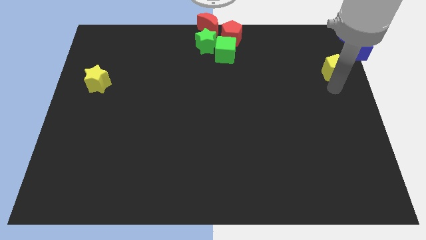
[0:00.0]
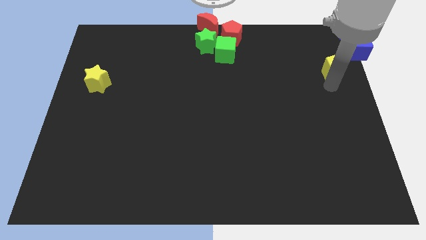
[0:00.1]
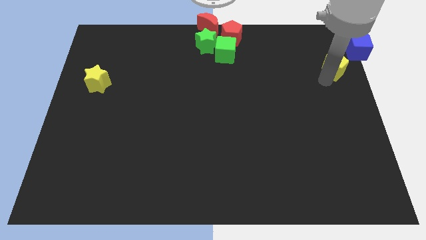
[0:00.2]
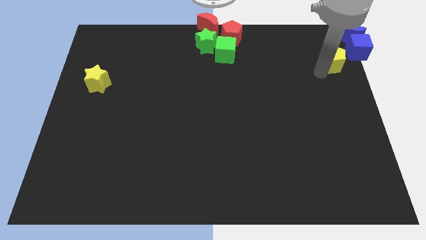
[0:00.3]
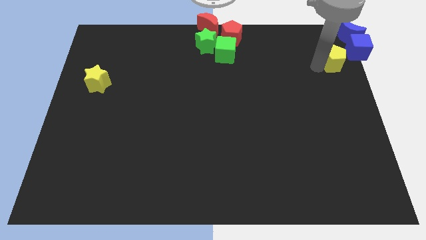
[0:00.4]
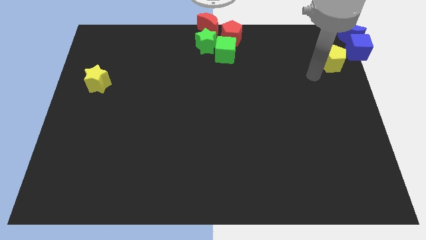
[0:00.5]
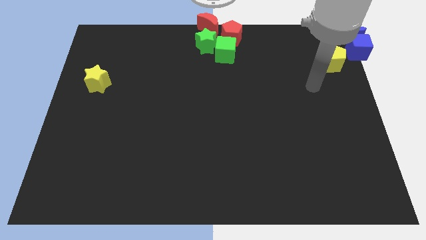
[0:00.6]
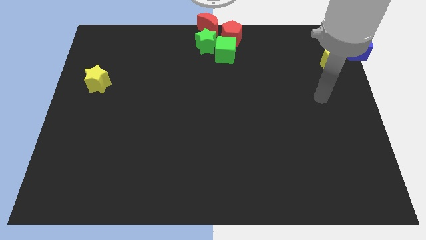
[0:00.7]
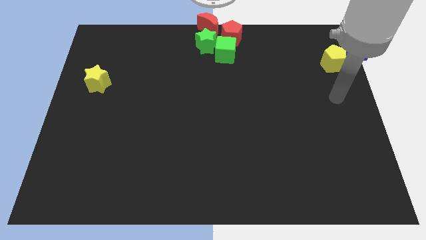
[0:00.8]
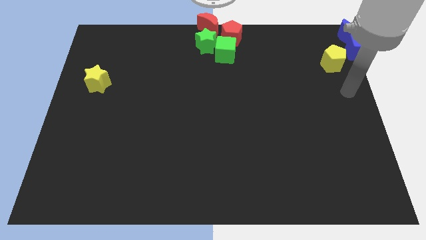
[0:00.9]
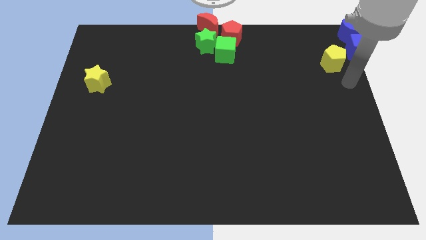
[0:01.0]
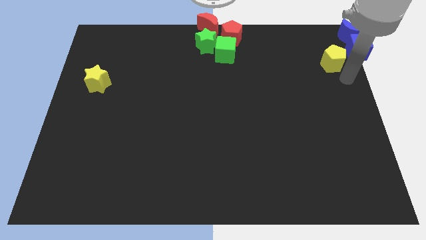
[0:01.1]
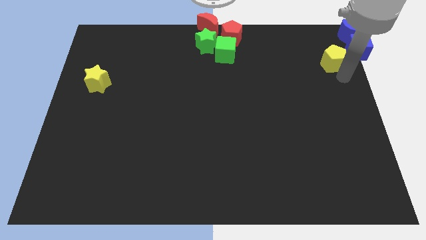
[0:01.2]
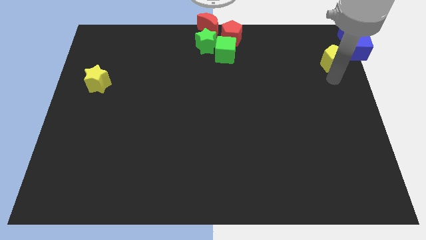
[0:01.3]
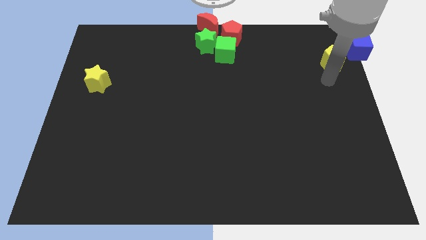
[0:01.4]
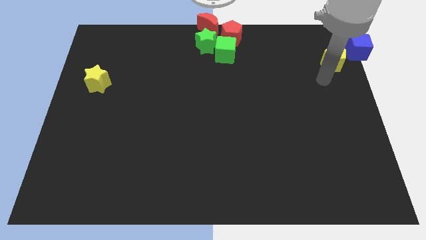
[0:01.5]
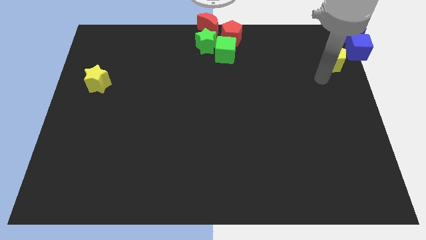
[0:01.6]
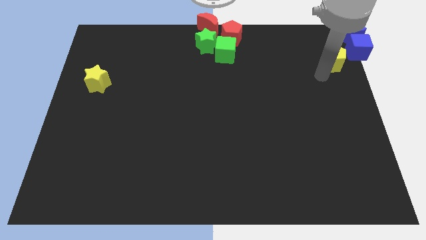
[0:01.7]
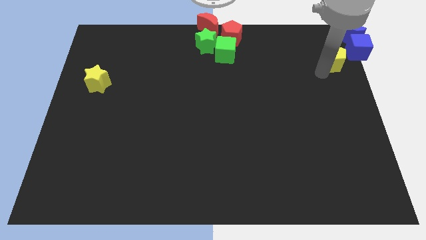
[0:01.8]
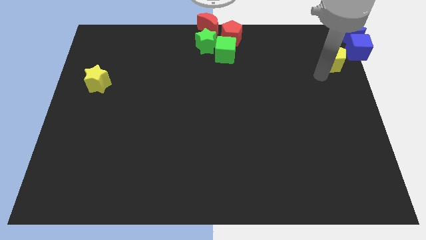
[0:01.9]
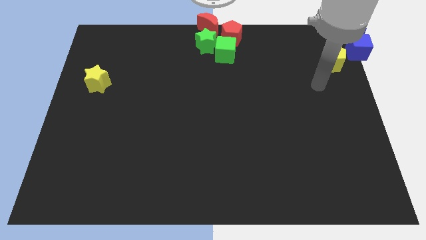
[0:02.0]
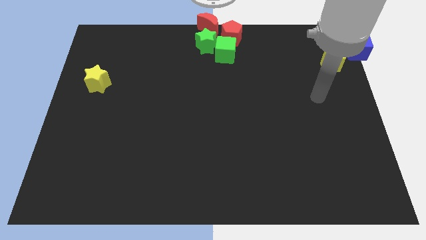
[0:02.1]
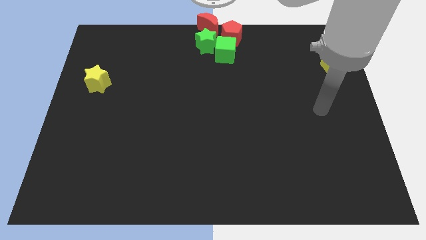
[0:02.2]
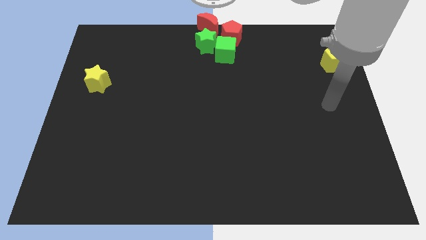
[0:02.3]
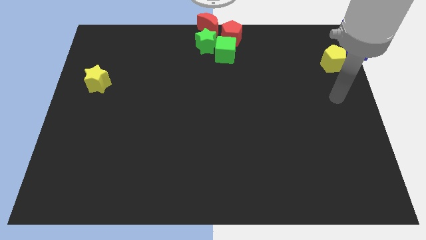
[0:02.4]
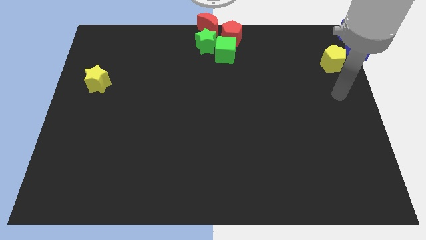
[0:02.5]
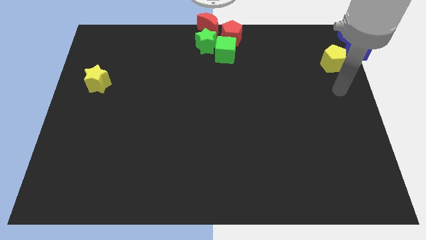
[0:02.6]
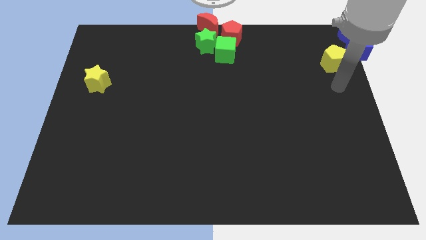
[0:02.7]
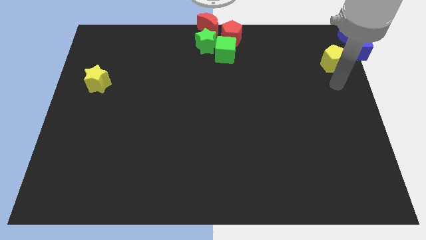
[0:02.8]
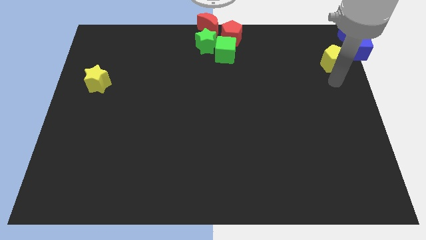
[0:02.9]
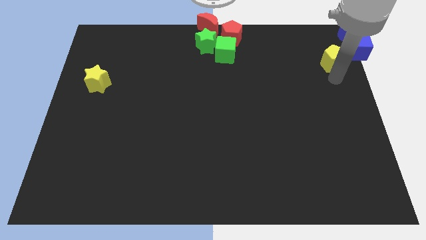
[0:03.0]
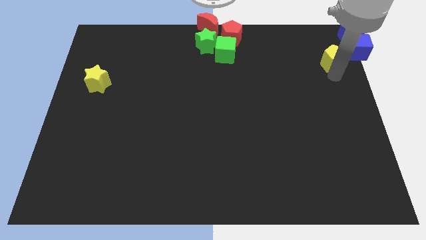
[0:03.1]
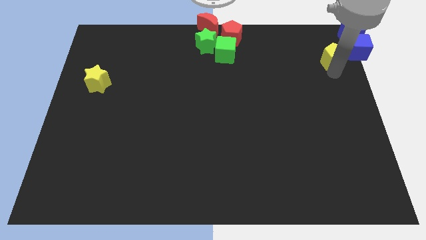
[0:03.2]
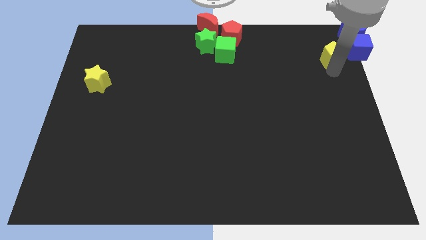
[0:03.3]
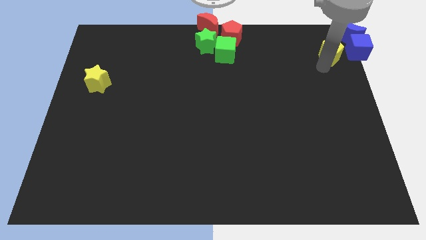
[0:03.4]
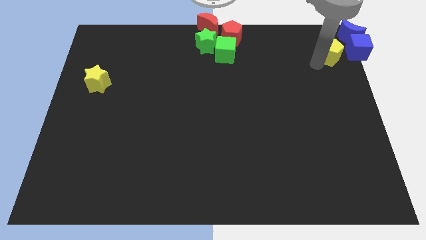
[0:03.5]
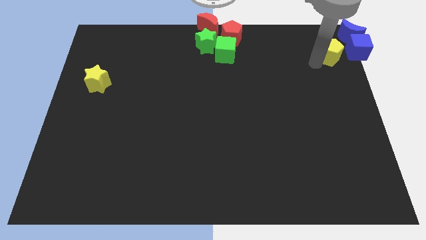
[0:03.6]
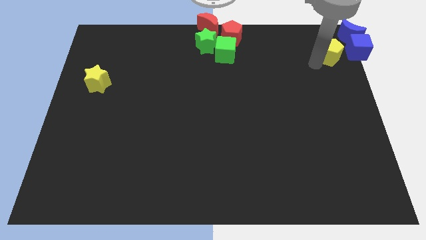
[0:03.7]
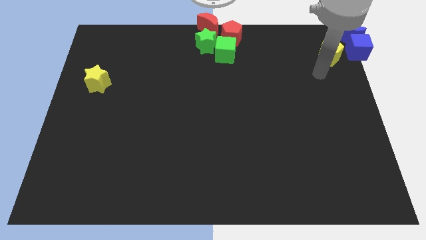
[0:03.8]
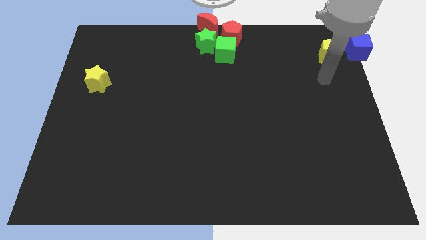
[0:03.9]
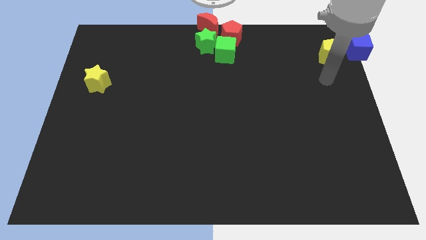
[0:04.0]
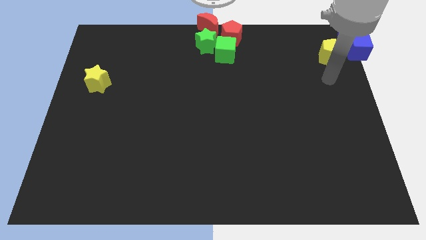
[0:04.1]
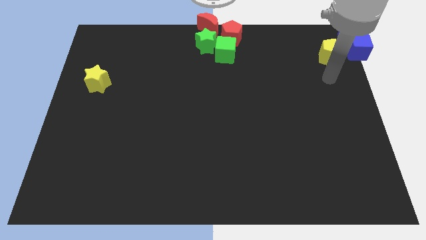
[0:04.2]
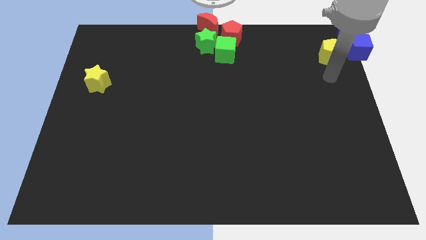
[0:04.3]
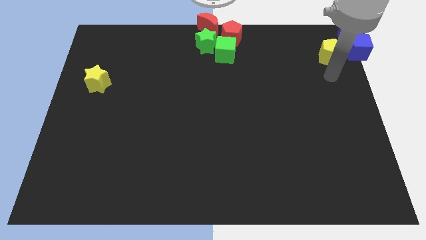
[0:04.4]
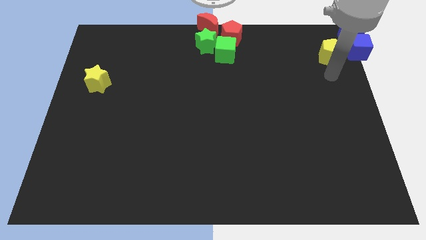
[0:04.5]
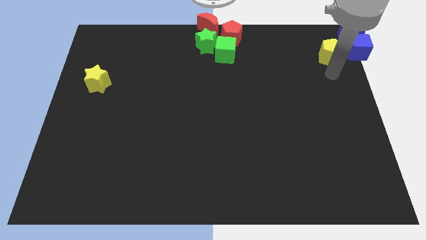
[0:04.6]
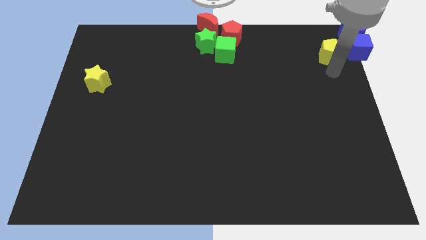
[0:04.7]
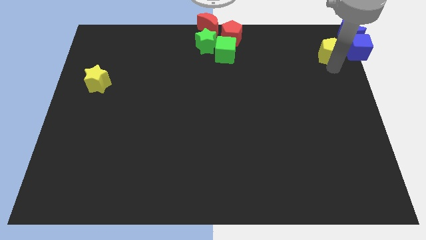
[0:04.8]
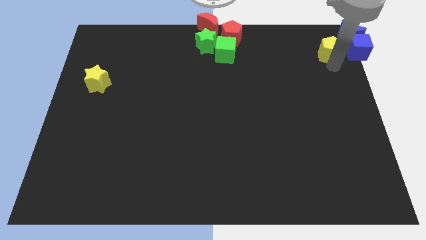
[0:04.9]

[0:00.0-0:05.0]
place the yellow pentagon at the top right corner

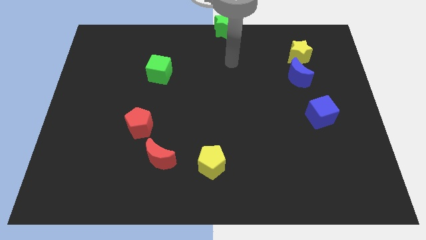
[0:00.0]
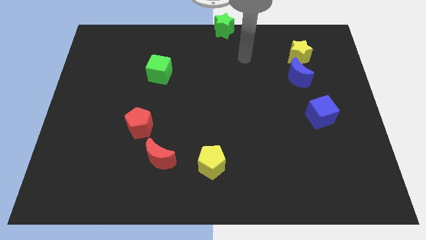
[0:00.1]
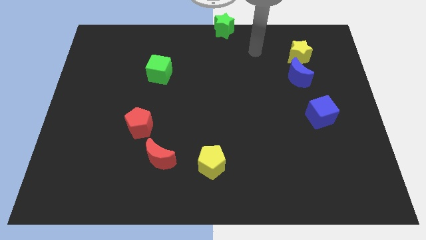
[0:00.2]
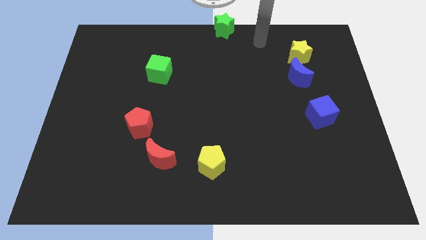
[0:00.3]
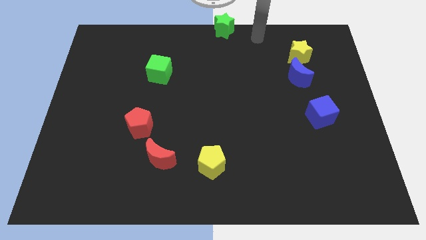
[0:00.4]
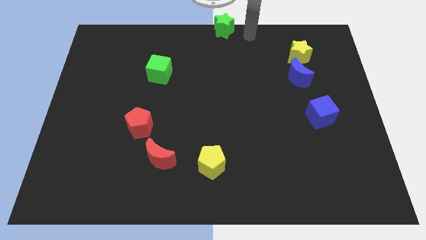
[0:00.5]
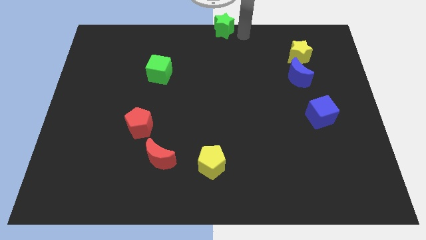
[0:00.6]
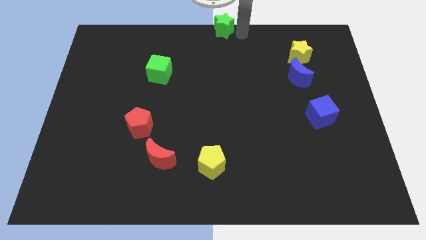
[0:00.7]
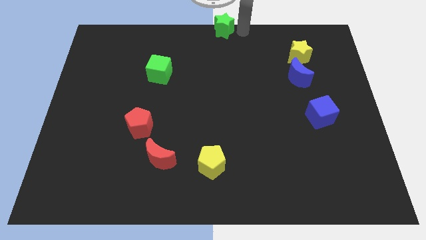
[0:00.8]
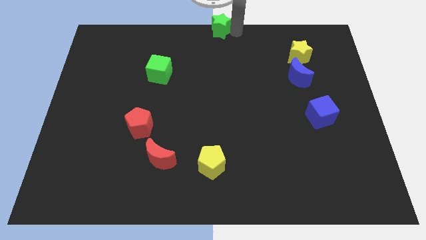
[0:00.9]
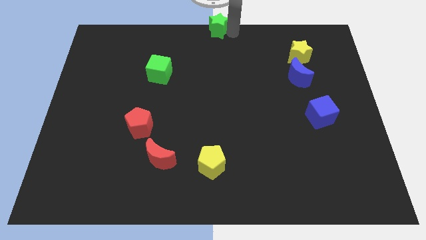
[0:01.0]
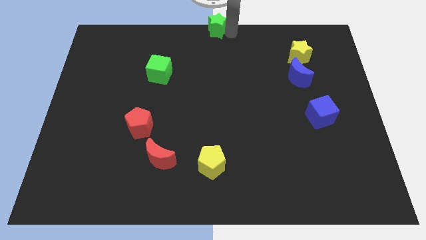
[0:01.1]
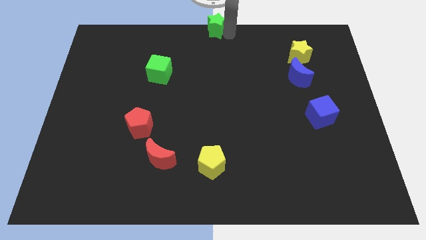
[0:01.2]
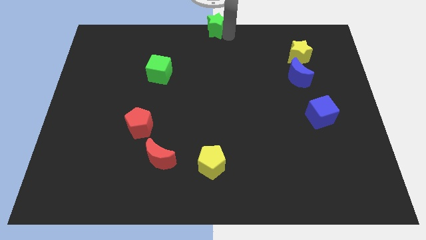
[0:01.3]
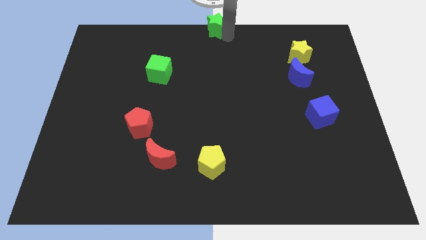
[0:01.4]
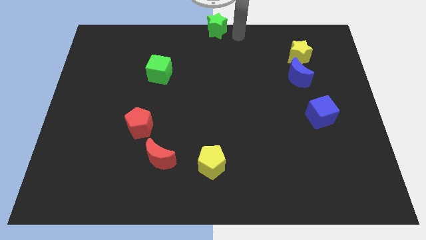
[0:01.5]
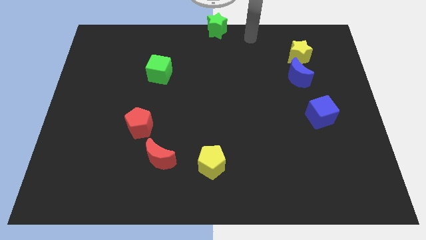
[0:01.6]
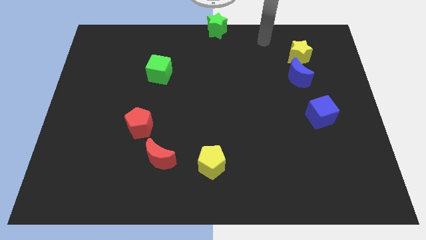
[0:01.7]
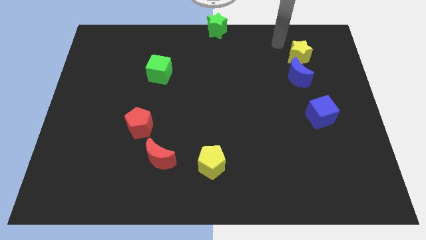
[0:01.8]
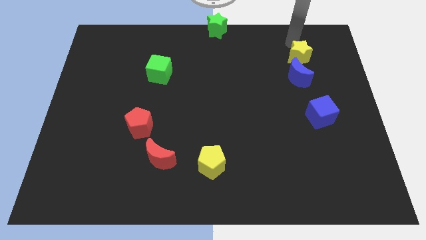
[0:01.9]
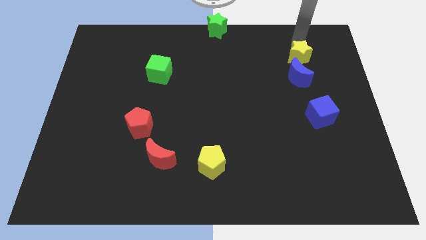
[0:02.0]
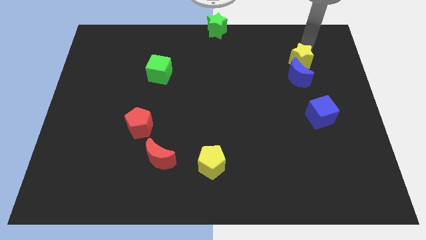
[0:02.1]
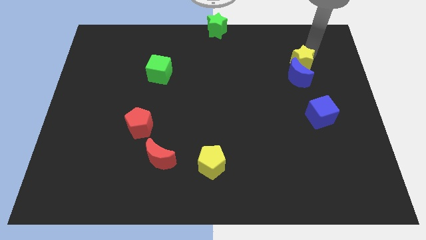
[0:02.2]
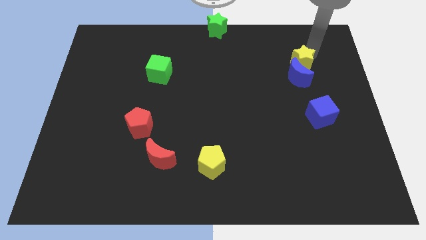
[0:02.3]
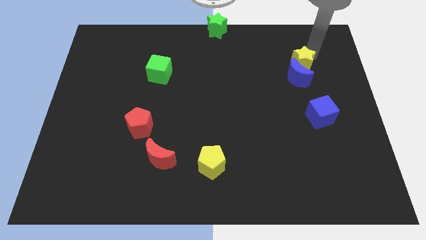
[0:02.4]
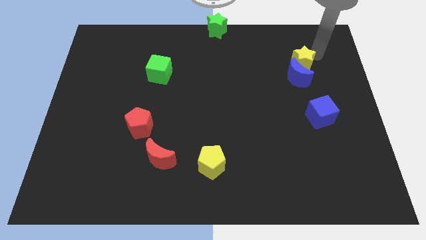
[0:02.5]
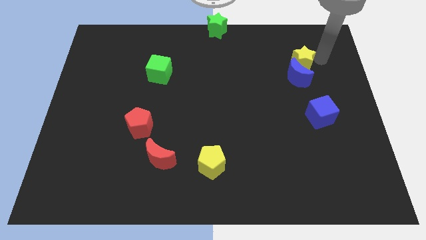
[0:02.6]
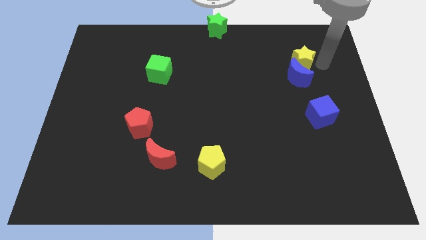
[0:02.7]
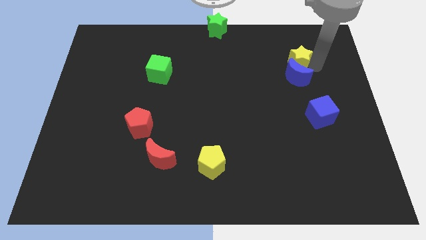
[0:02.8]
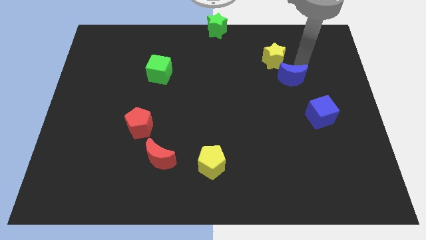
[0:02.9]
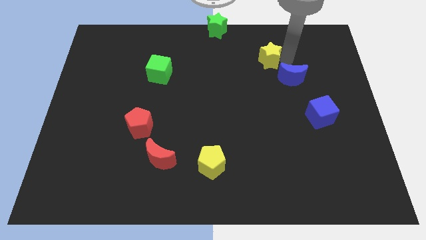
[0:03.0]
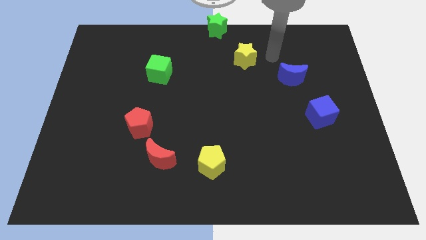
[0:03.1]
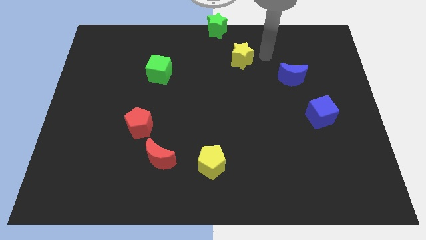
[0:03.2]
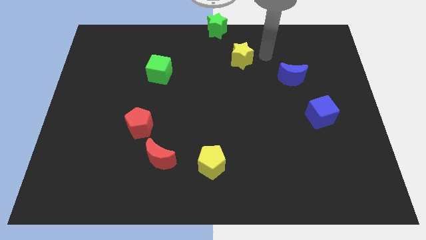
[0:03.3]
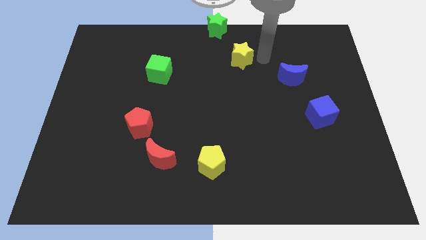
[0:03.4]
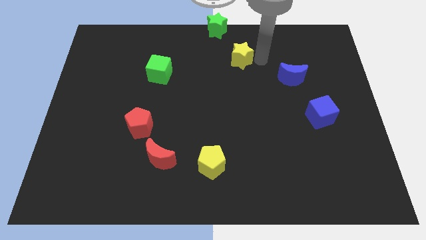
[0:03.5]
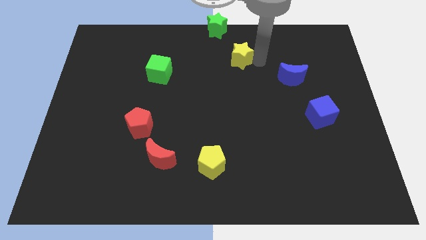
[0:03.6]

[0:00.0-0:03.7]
place the yellow star diagonaly to green star

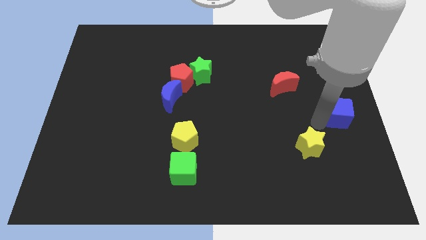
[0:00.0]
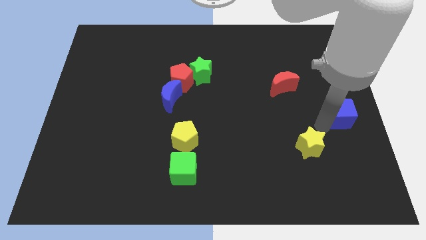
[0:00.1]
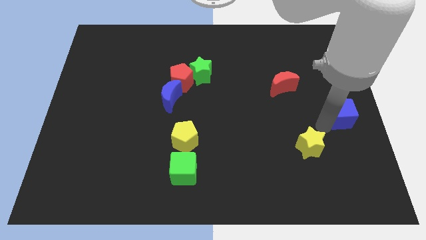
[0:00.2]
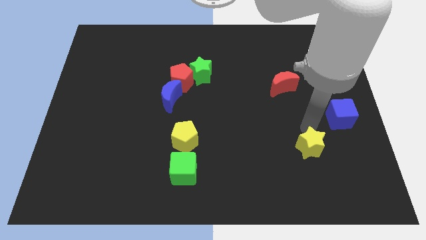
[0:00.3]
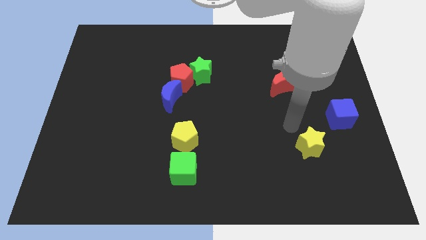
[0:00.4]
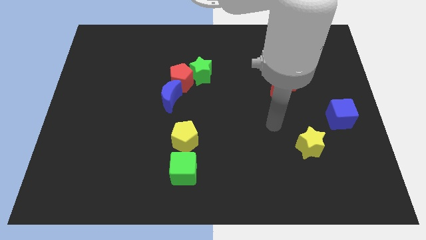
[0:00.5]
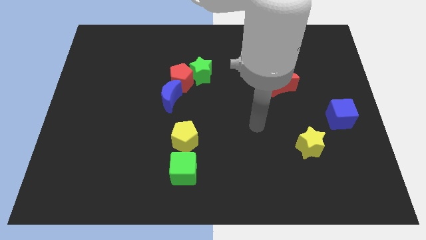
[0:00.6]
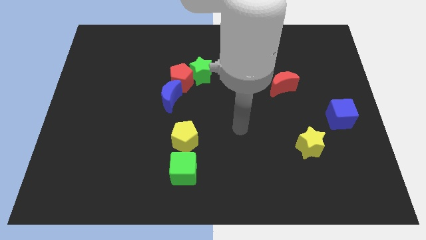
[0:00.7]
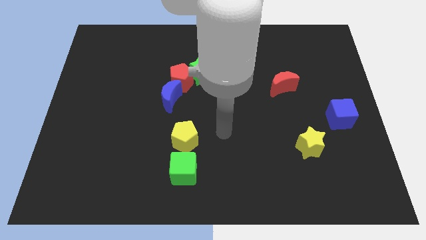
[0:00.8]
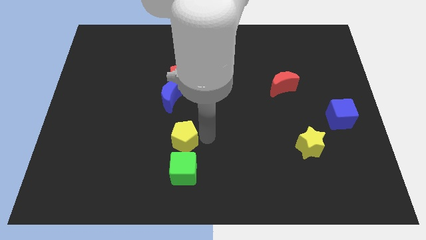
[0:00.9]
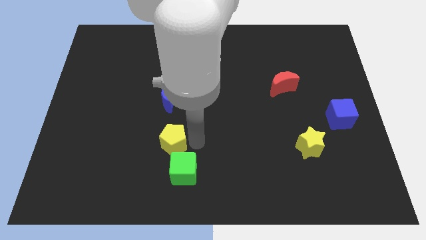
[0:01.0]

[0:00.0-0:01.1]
move your hand towards the yellow pentagon
